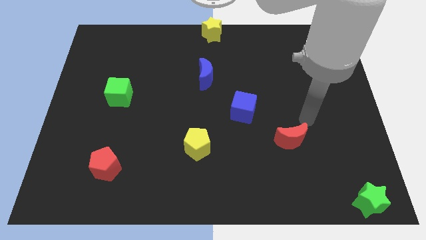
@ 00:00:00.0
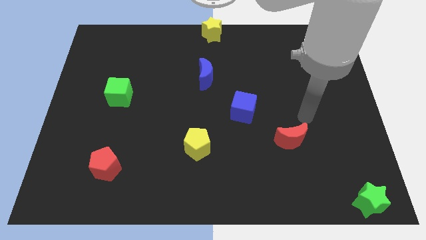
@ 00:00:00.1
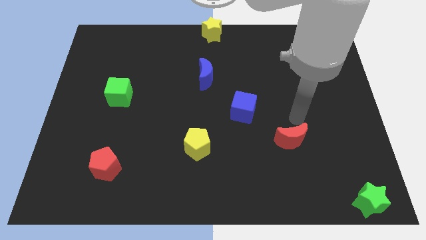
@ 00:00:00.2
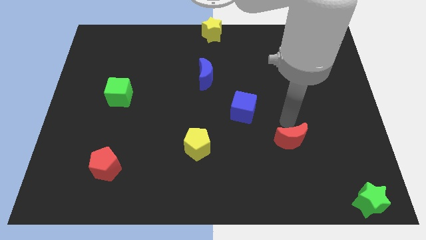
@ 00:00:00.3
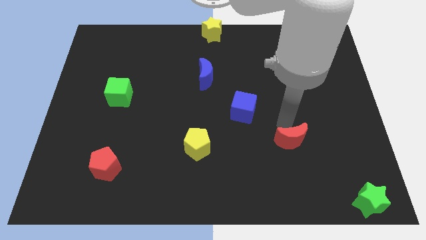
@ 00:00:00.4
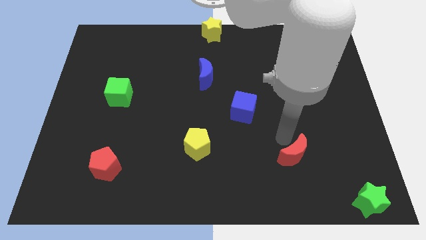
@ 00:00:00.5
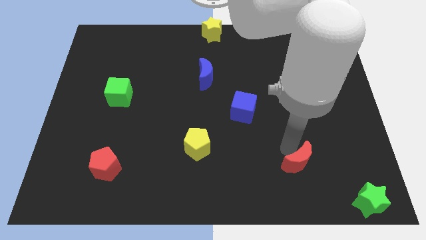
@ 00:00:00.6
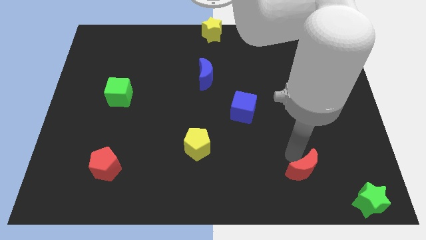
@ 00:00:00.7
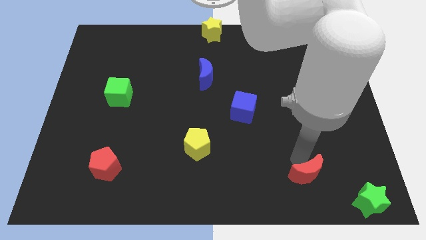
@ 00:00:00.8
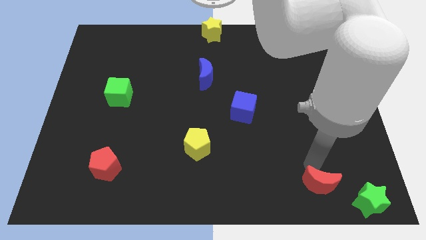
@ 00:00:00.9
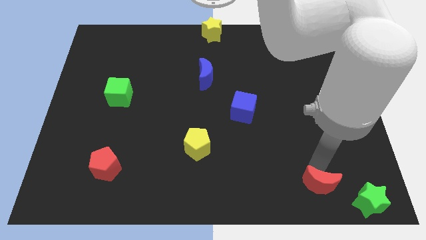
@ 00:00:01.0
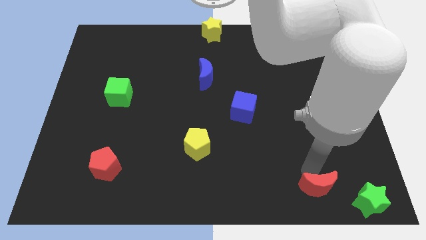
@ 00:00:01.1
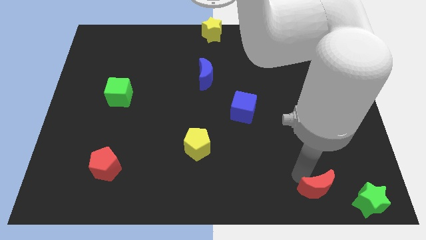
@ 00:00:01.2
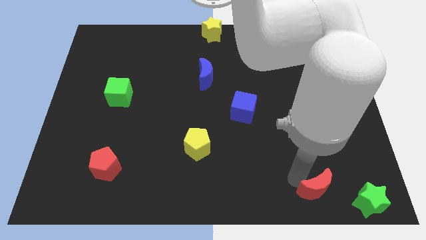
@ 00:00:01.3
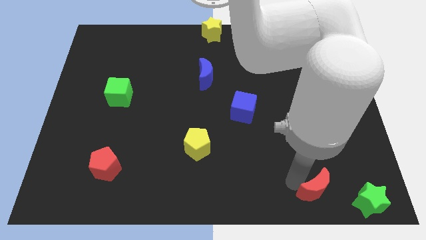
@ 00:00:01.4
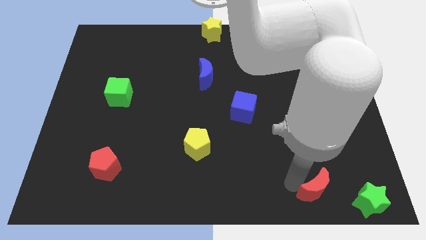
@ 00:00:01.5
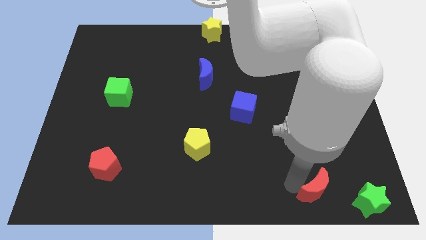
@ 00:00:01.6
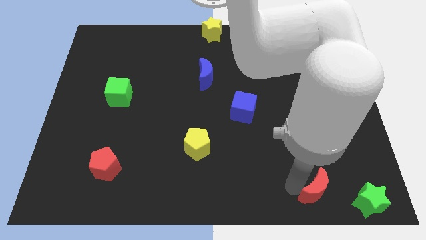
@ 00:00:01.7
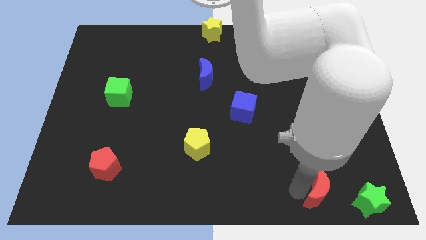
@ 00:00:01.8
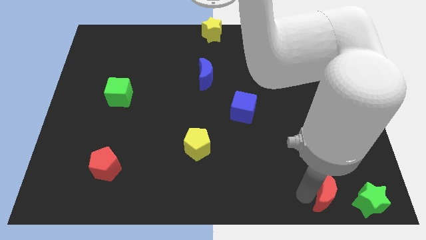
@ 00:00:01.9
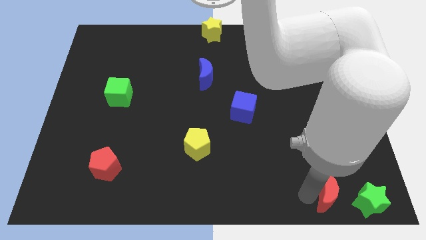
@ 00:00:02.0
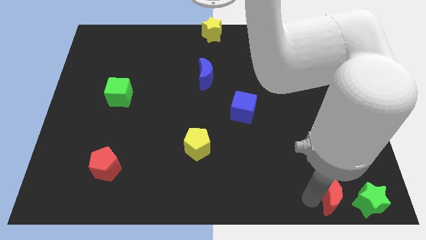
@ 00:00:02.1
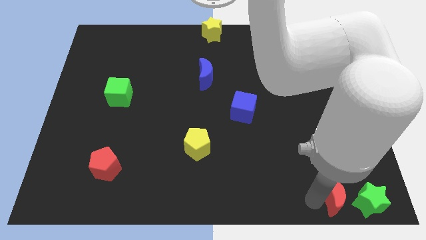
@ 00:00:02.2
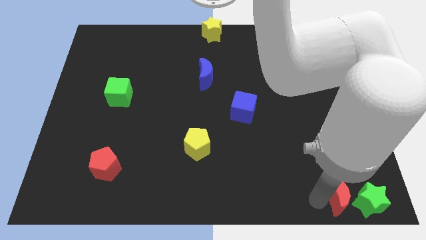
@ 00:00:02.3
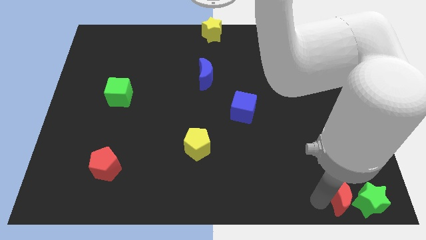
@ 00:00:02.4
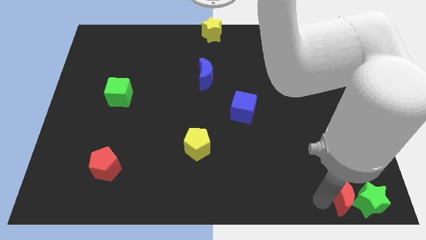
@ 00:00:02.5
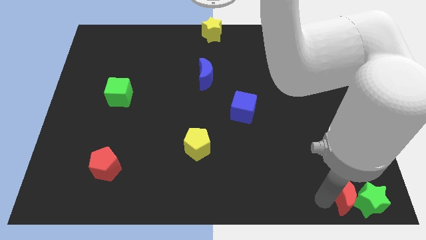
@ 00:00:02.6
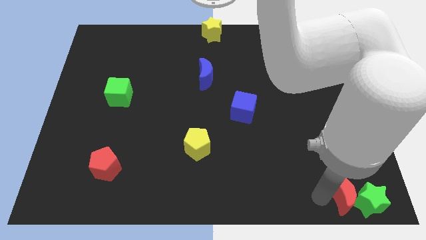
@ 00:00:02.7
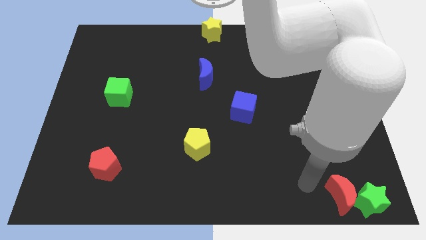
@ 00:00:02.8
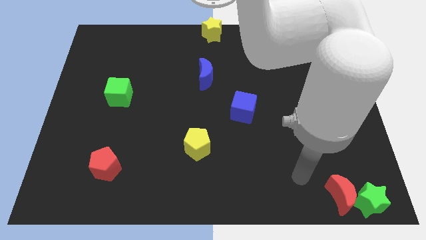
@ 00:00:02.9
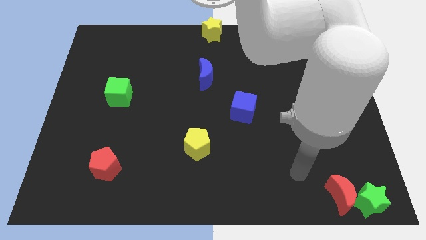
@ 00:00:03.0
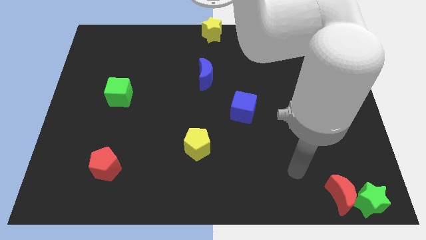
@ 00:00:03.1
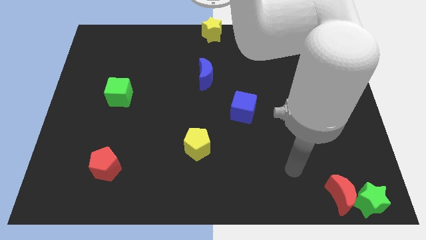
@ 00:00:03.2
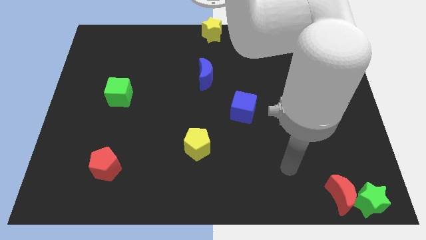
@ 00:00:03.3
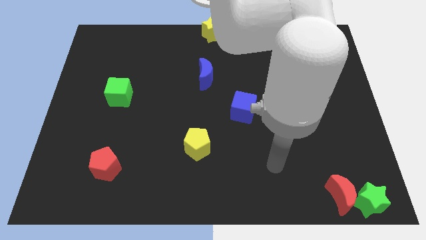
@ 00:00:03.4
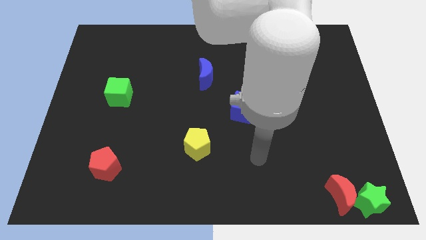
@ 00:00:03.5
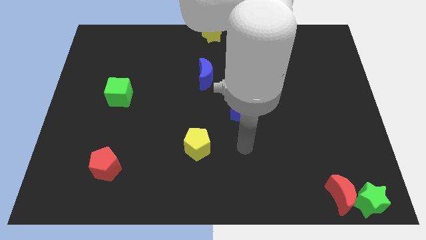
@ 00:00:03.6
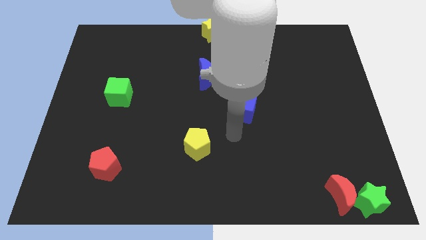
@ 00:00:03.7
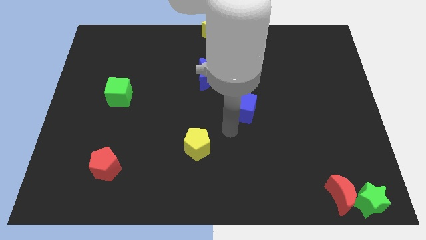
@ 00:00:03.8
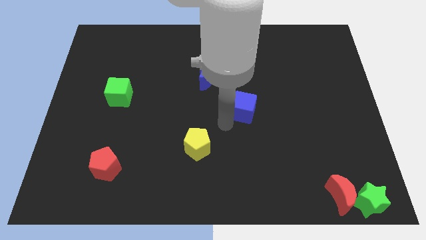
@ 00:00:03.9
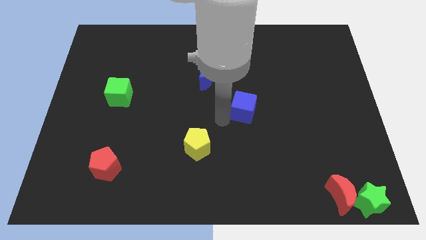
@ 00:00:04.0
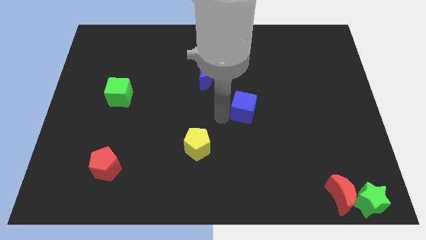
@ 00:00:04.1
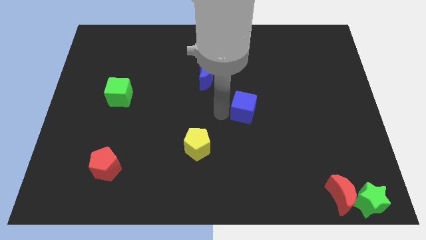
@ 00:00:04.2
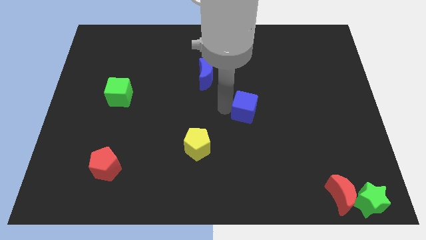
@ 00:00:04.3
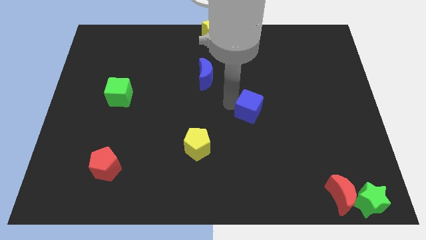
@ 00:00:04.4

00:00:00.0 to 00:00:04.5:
move the red crescent left beside the green star

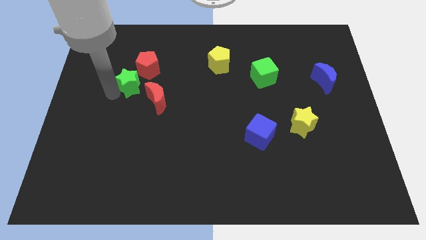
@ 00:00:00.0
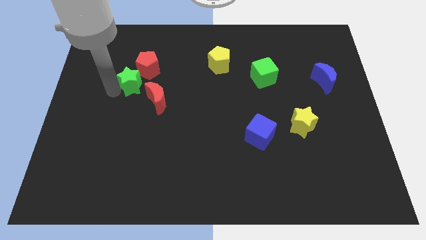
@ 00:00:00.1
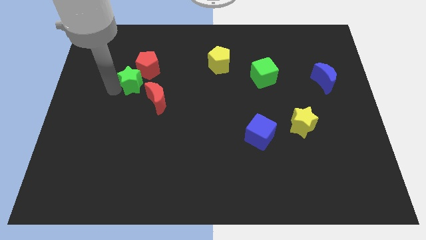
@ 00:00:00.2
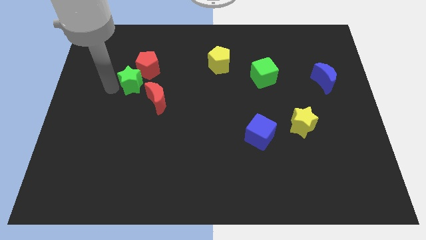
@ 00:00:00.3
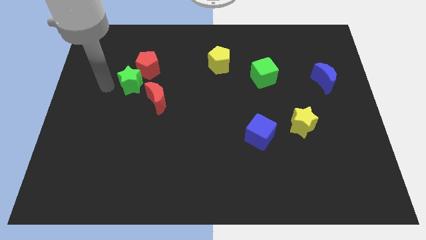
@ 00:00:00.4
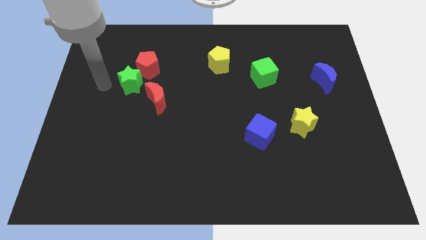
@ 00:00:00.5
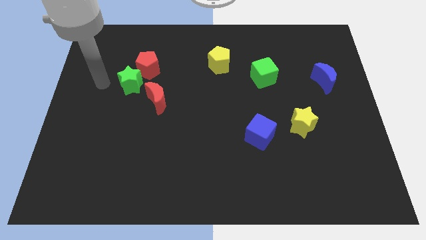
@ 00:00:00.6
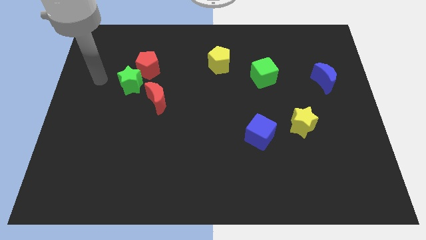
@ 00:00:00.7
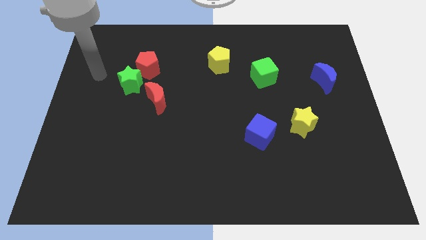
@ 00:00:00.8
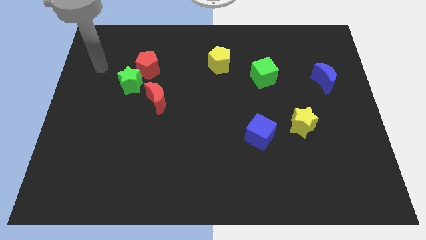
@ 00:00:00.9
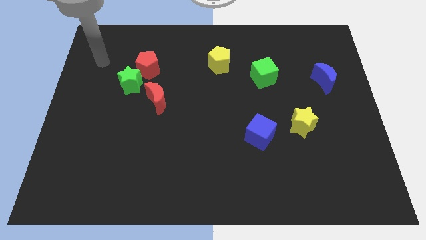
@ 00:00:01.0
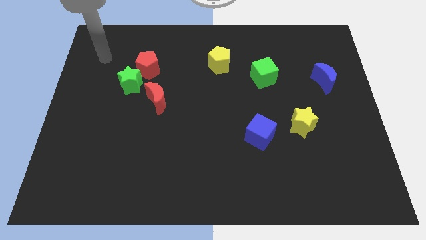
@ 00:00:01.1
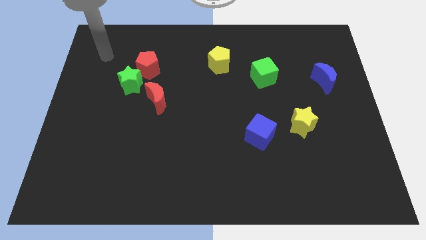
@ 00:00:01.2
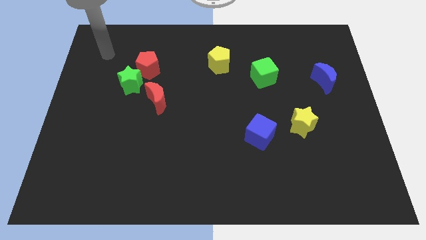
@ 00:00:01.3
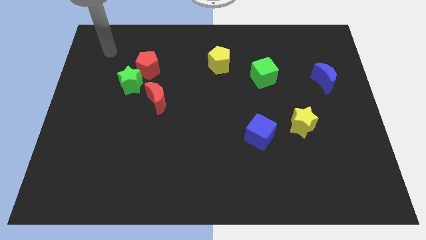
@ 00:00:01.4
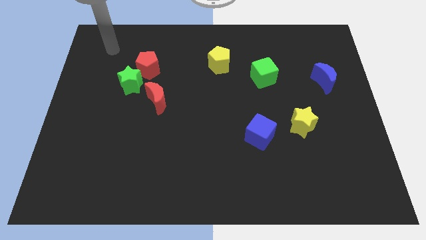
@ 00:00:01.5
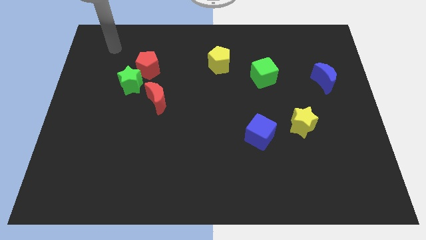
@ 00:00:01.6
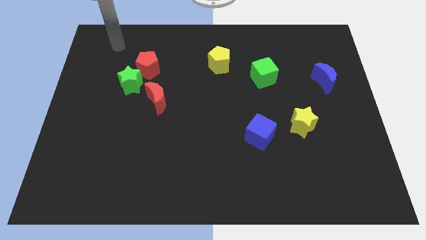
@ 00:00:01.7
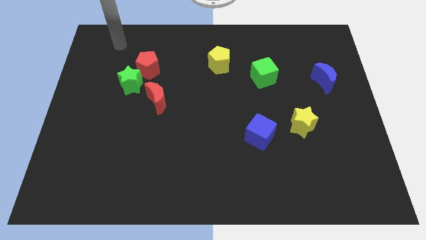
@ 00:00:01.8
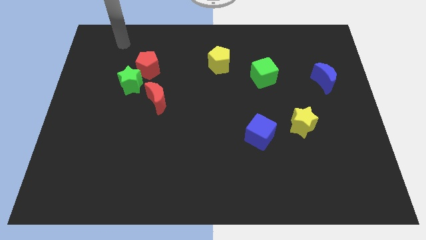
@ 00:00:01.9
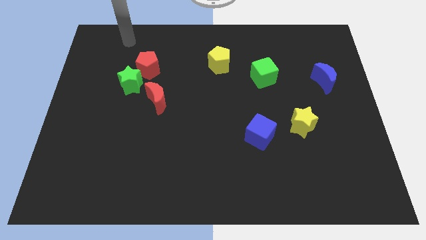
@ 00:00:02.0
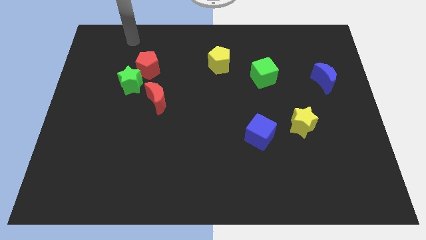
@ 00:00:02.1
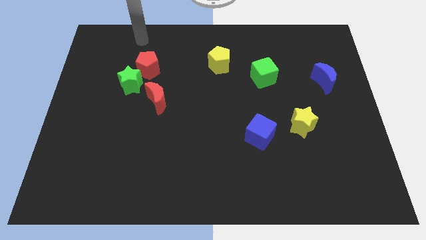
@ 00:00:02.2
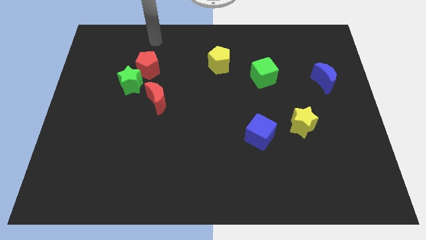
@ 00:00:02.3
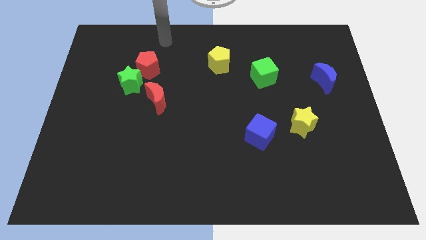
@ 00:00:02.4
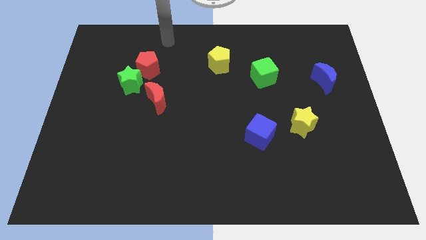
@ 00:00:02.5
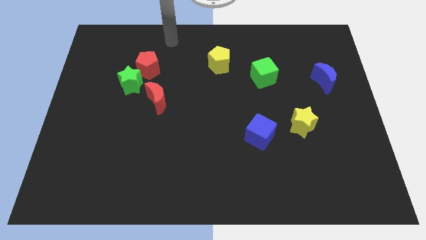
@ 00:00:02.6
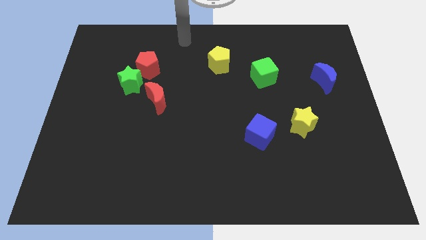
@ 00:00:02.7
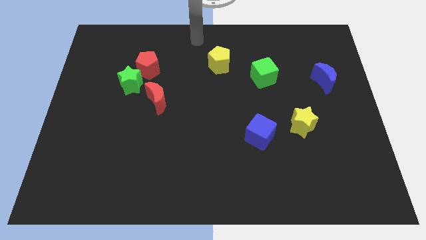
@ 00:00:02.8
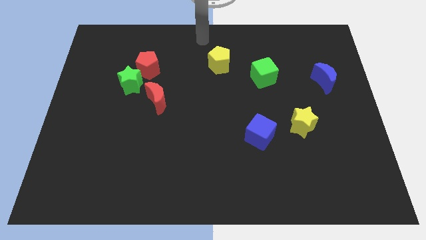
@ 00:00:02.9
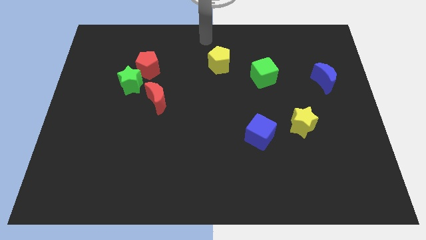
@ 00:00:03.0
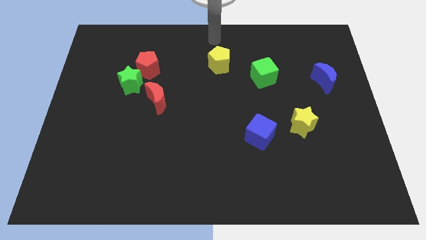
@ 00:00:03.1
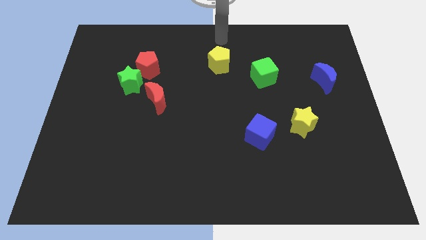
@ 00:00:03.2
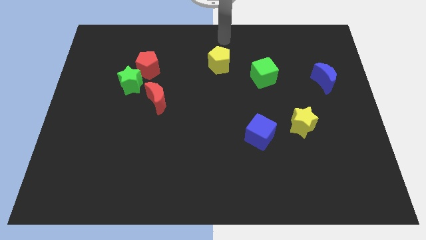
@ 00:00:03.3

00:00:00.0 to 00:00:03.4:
move your arm towards the yellow pentagon

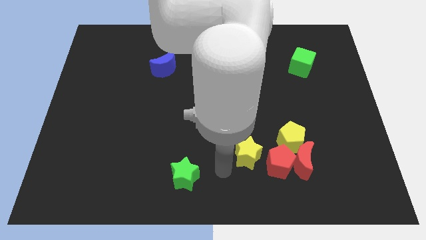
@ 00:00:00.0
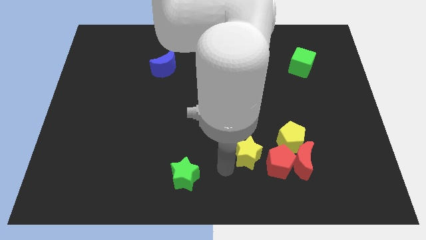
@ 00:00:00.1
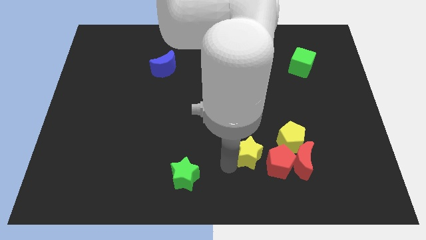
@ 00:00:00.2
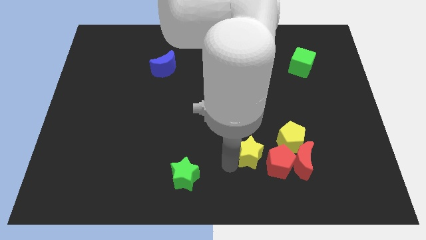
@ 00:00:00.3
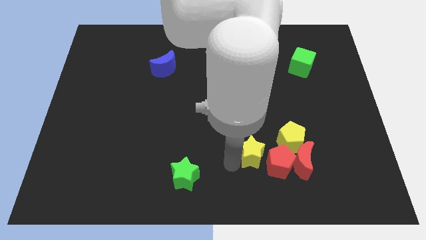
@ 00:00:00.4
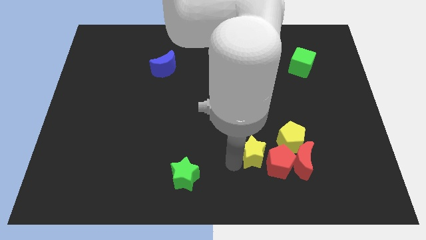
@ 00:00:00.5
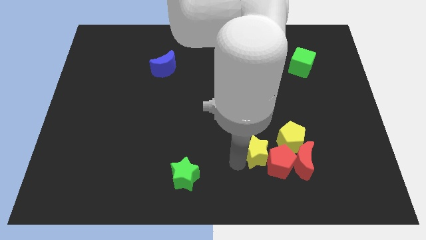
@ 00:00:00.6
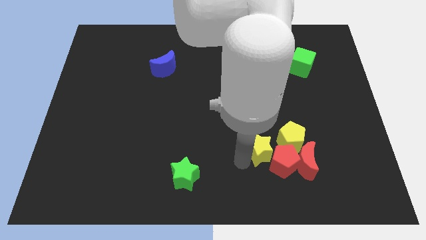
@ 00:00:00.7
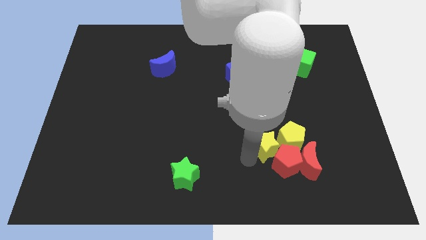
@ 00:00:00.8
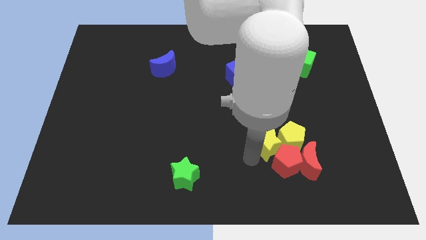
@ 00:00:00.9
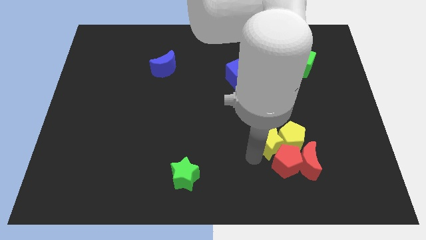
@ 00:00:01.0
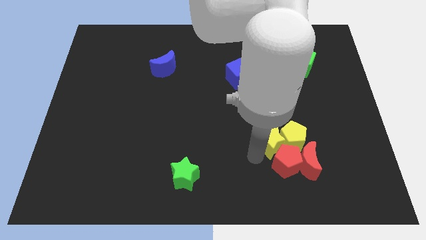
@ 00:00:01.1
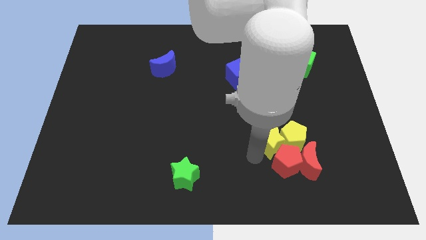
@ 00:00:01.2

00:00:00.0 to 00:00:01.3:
move the yellow star into the yellow pentagon
